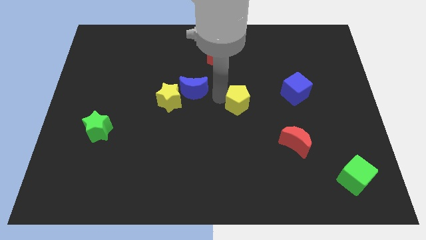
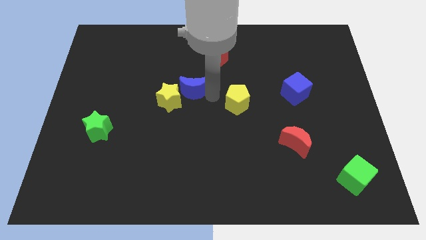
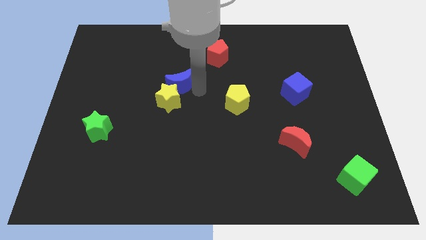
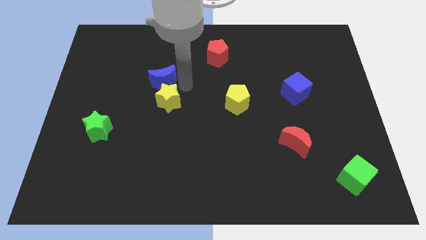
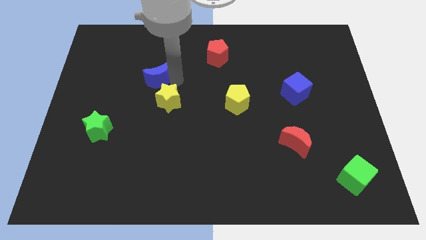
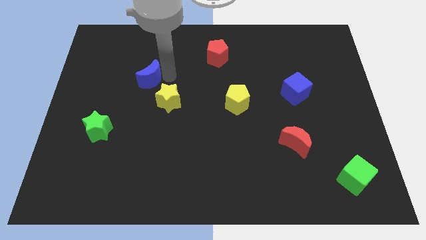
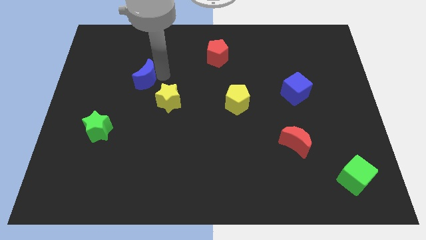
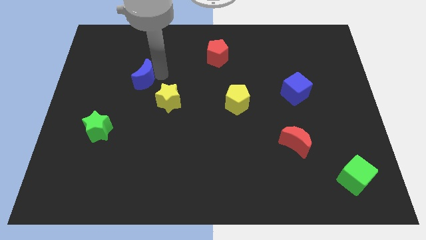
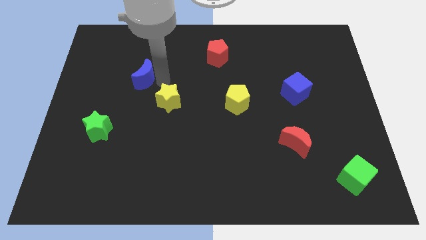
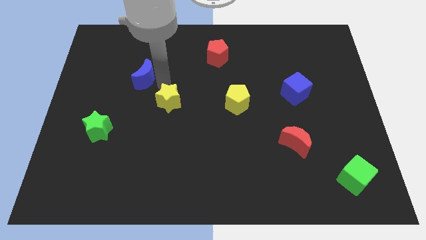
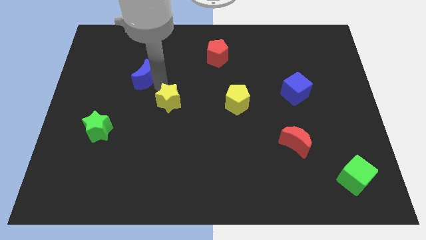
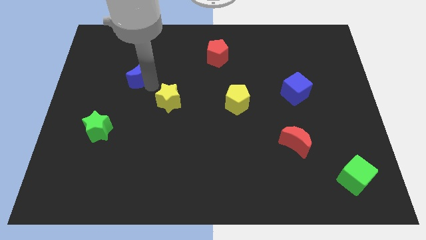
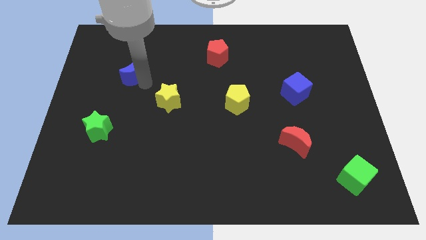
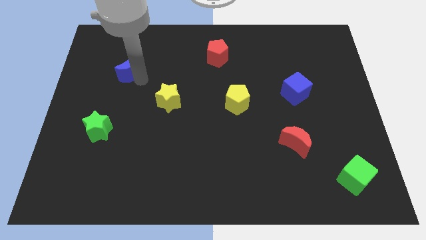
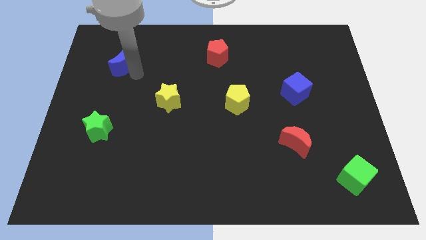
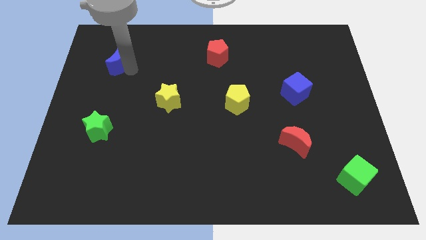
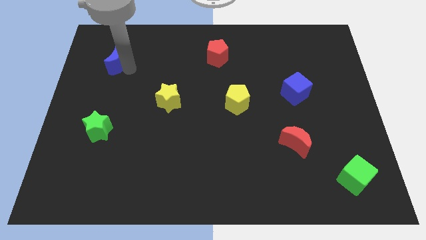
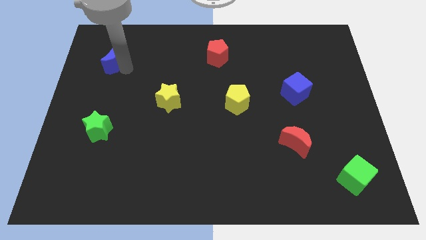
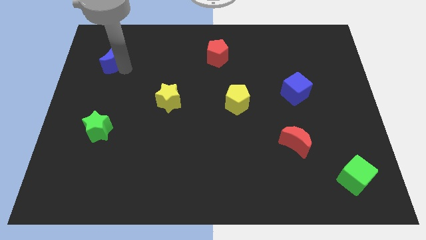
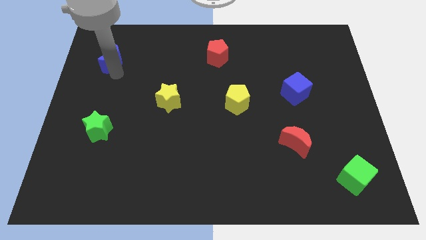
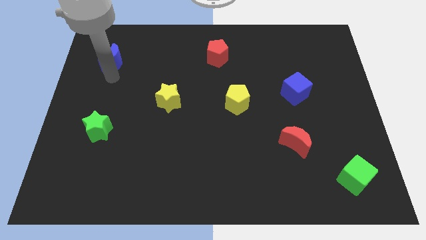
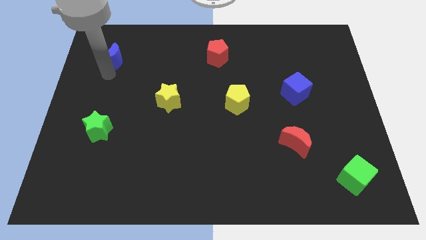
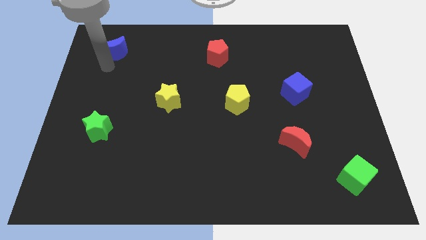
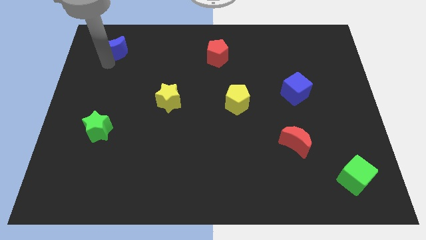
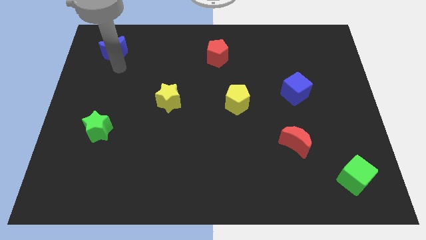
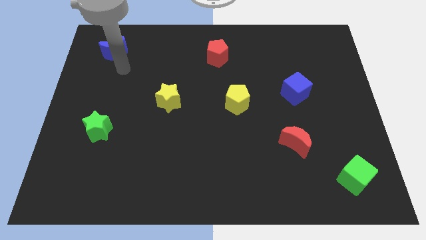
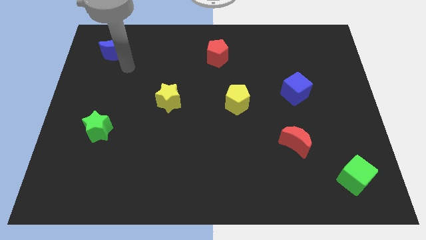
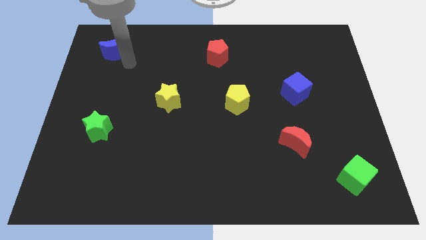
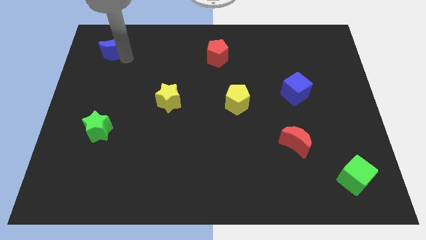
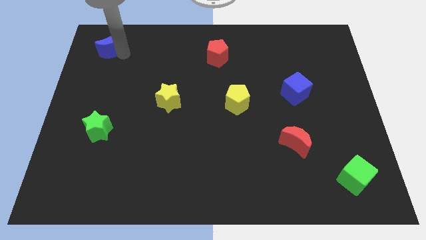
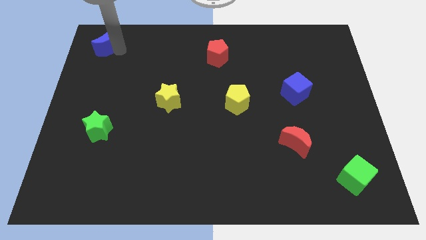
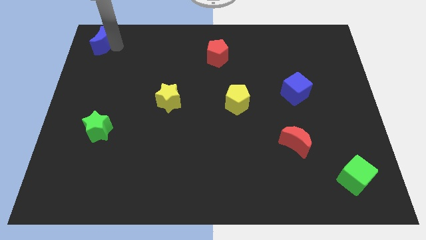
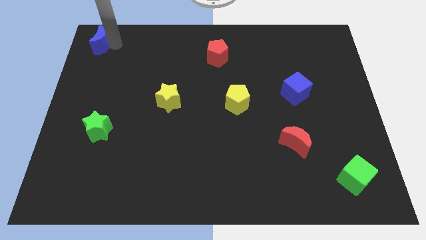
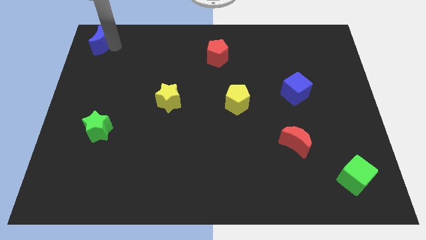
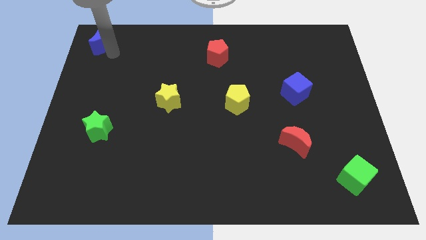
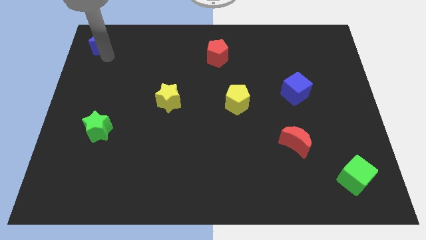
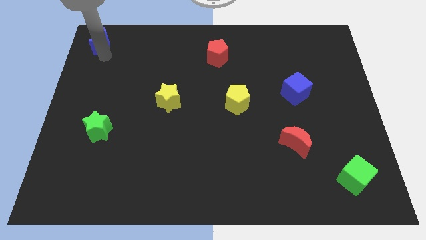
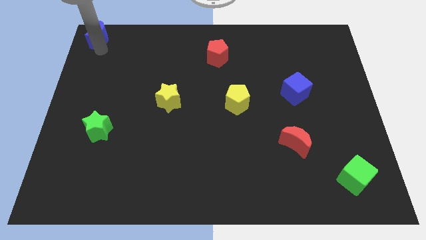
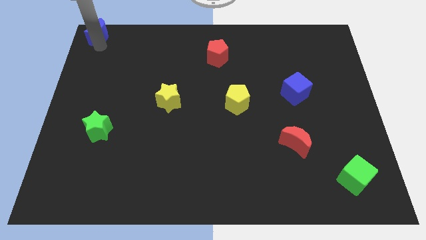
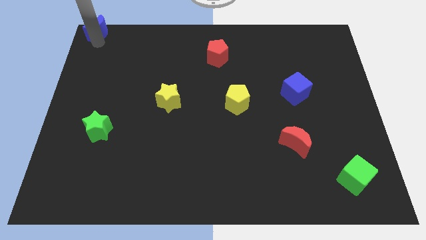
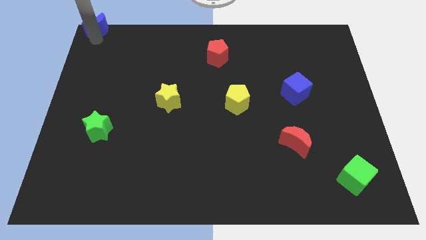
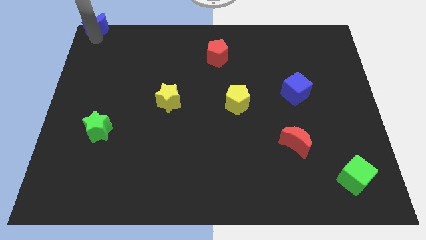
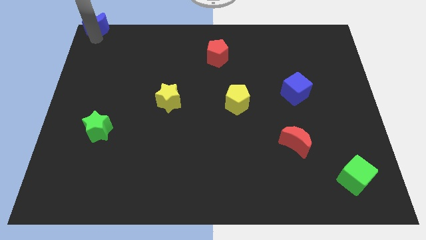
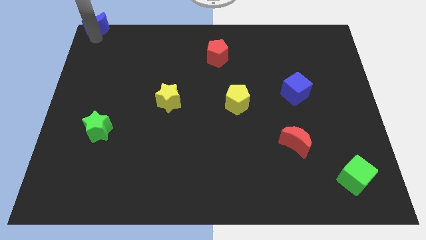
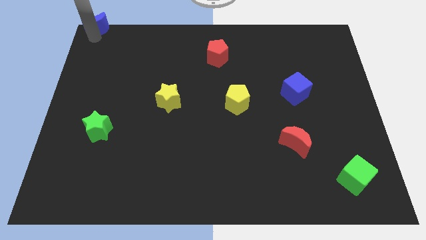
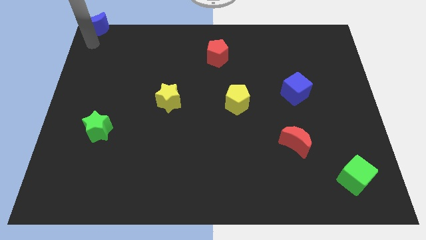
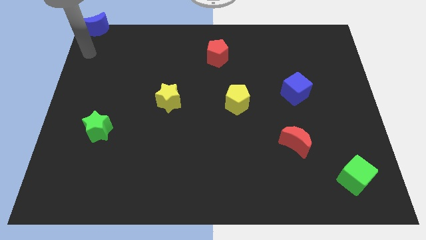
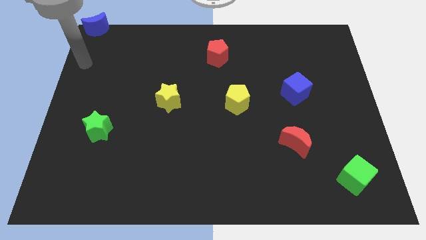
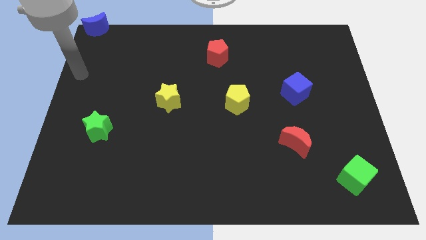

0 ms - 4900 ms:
push the blue crescent to the top left corner of the board

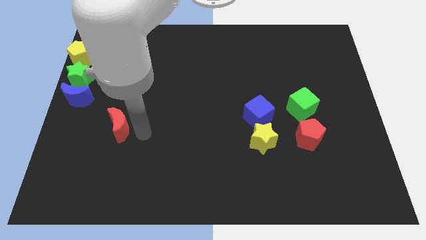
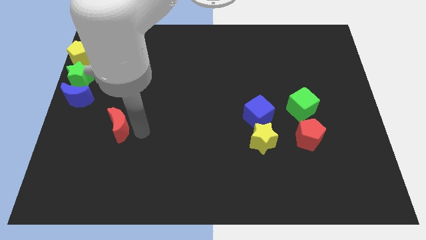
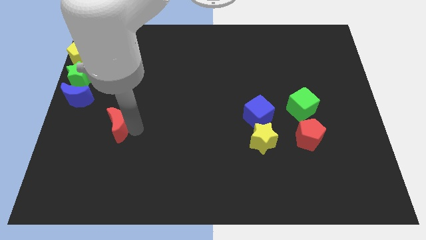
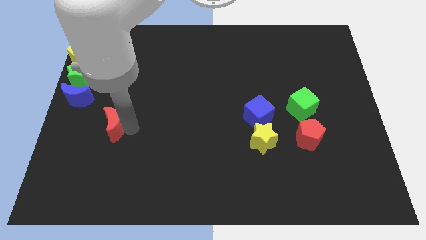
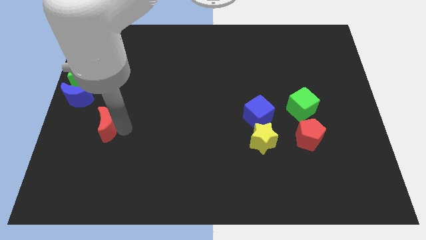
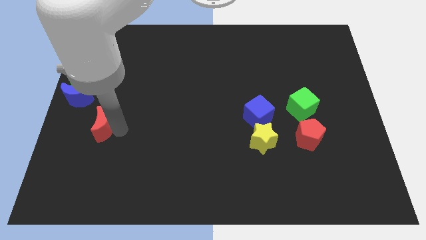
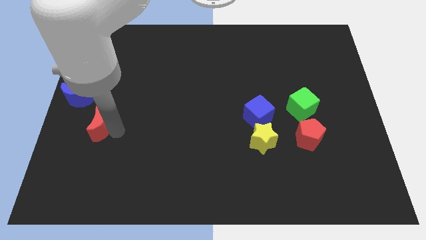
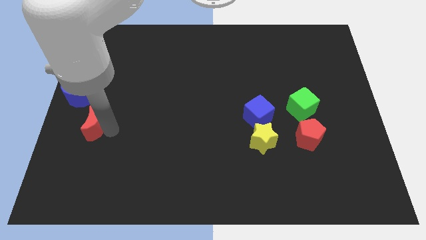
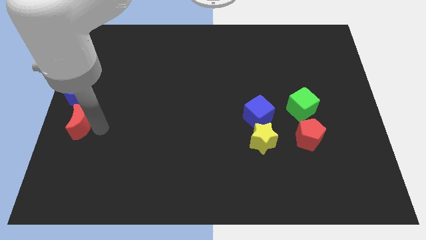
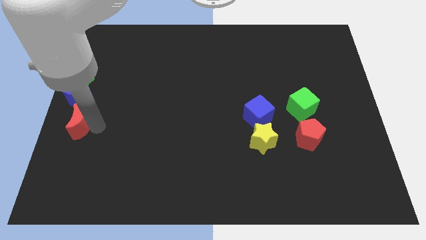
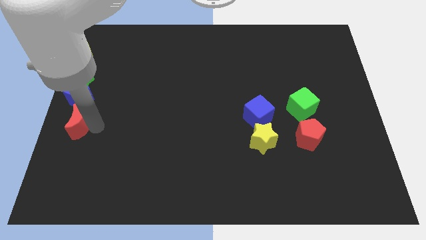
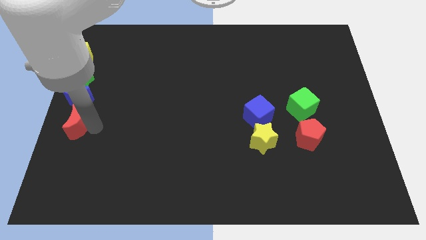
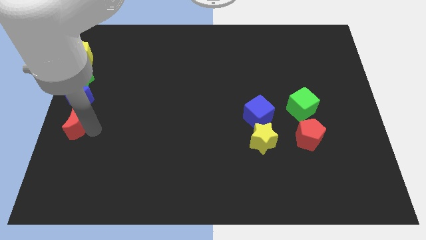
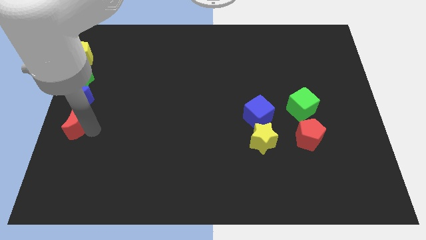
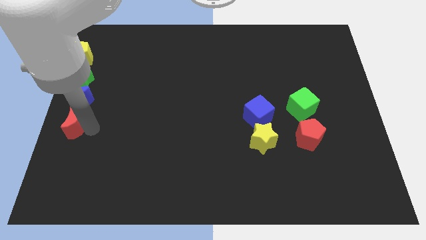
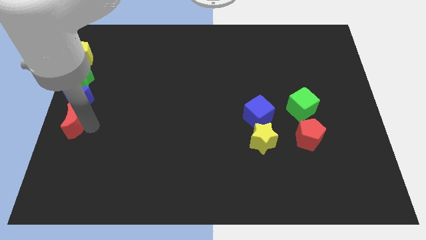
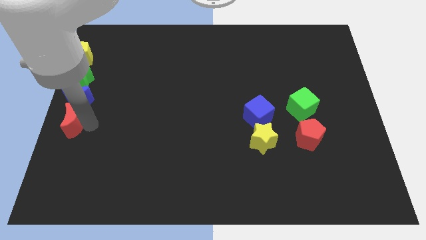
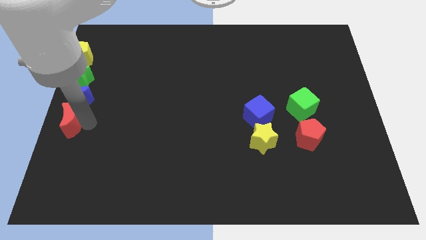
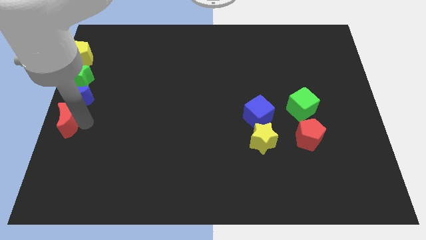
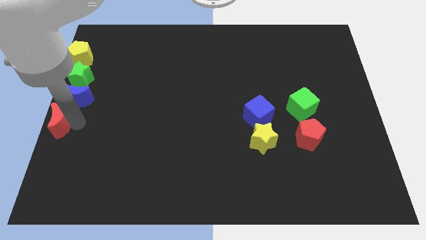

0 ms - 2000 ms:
place the red crescent st the bottom side of the blue crescent

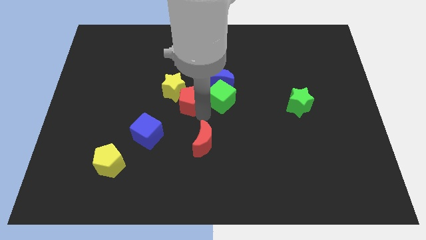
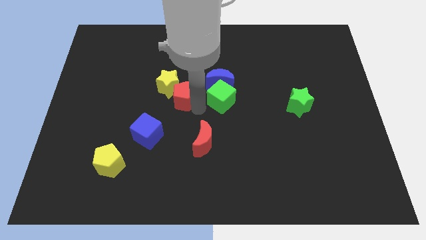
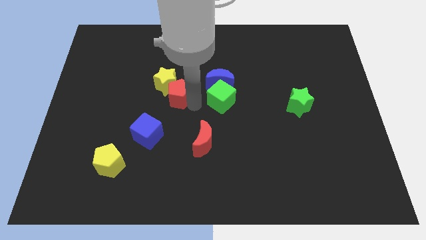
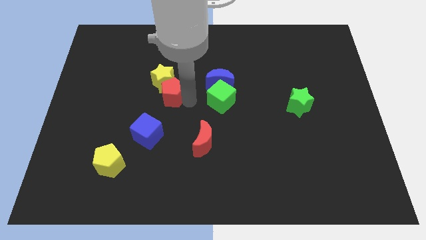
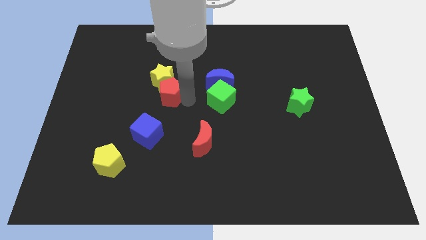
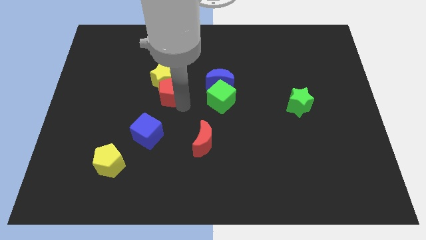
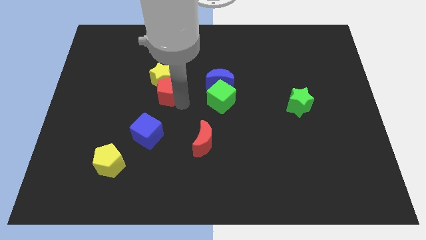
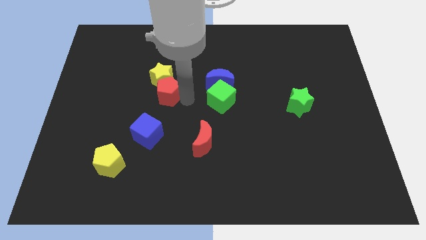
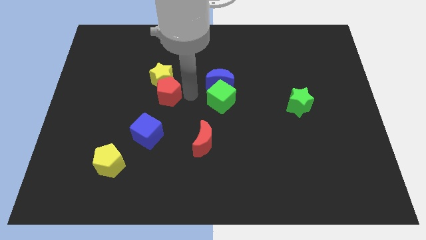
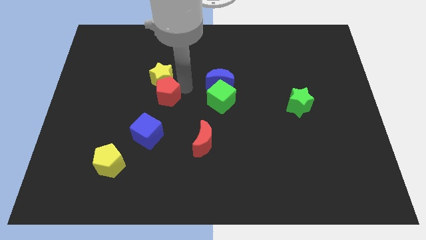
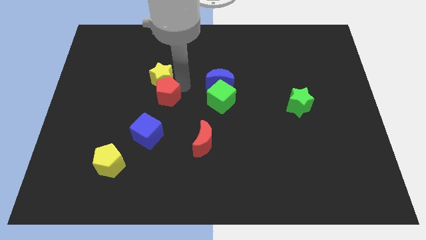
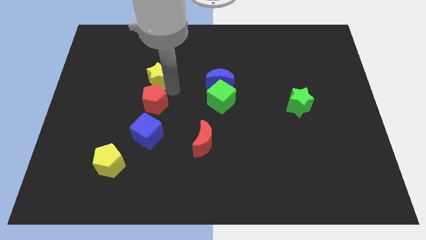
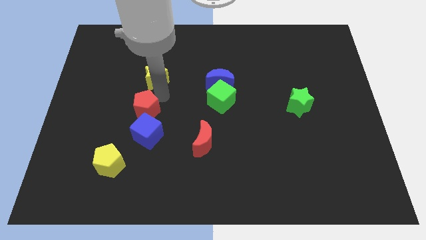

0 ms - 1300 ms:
place the red pentagon in between the blue cube and yellow star

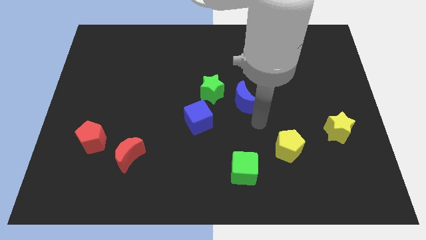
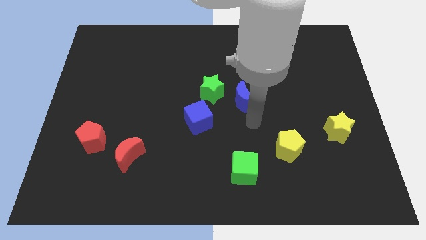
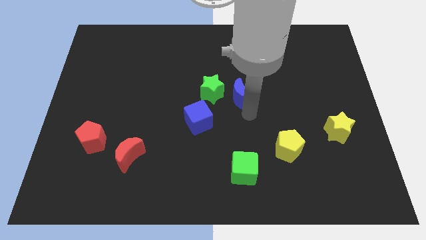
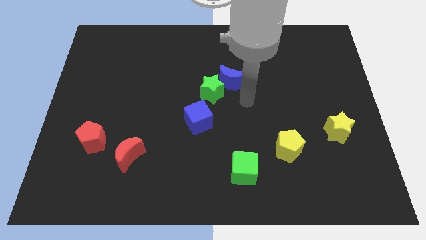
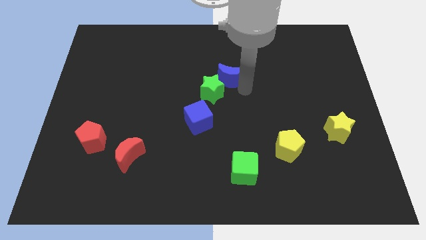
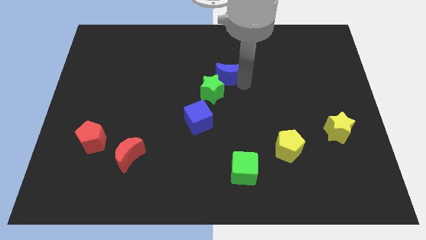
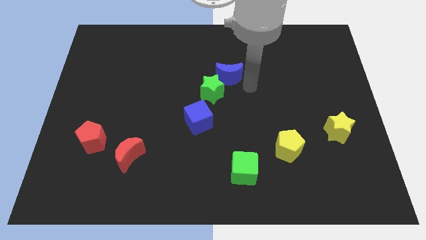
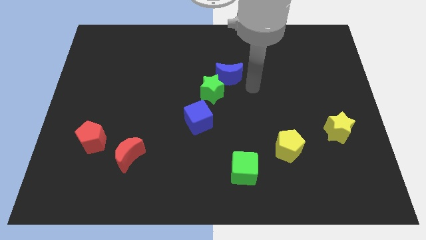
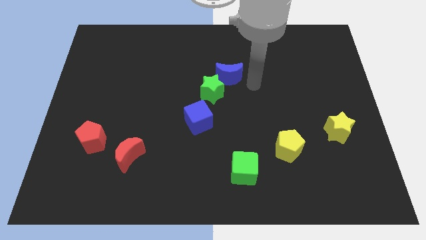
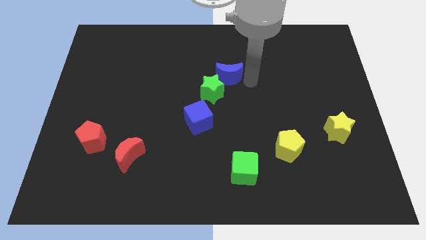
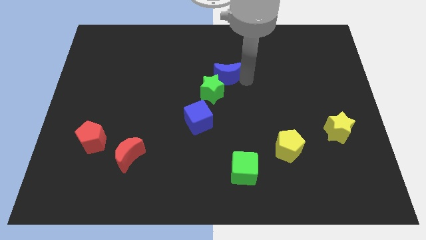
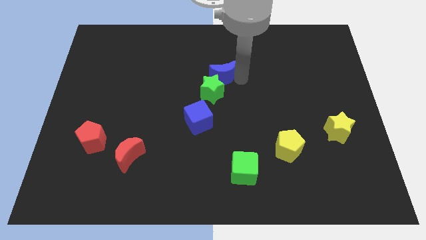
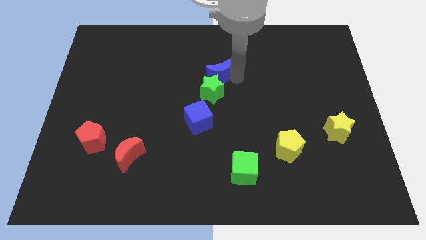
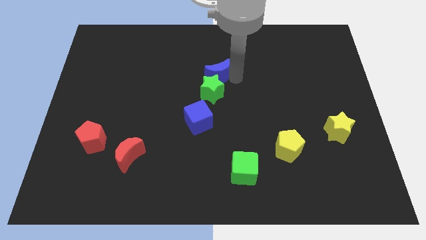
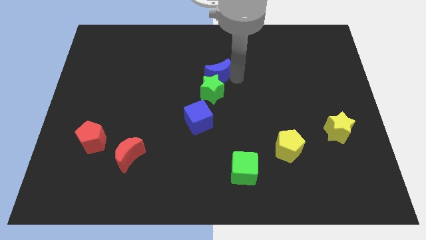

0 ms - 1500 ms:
move the blue crescent to the top of the green star
